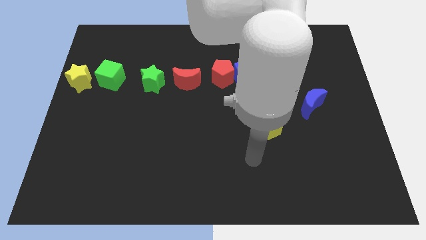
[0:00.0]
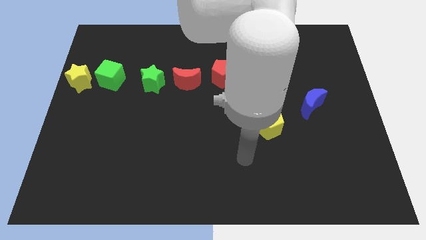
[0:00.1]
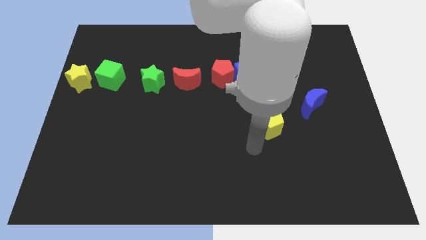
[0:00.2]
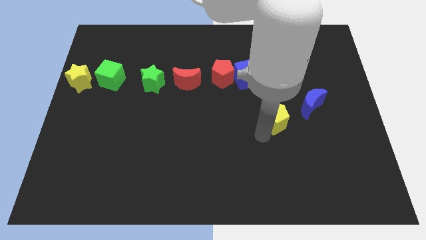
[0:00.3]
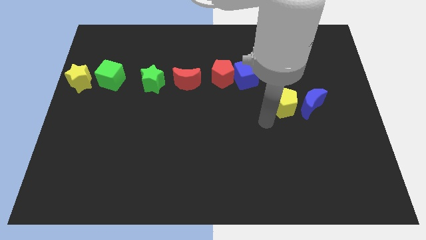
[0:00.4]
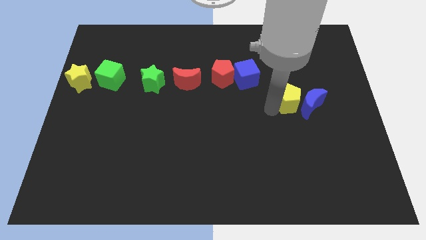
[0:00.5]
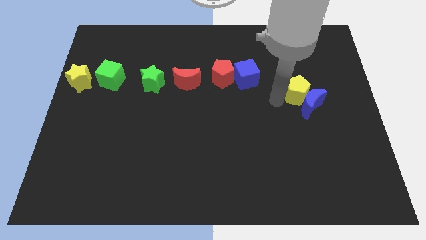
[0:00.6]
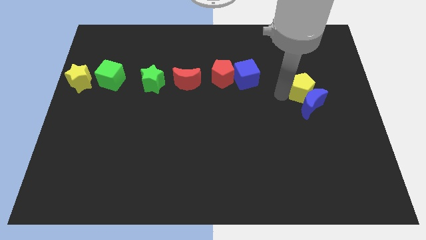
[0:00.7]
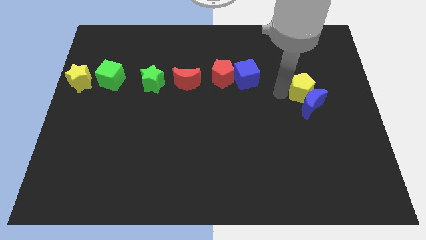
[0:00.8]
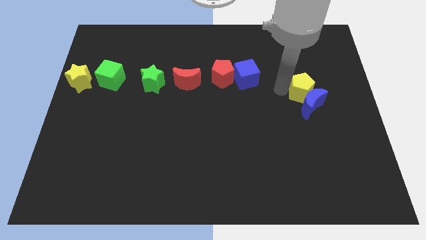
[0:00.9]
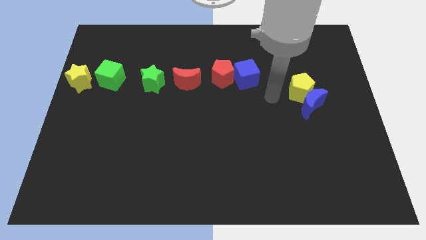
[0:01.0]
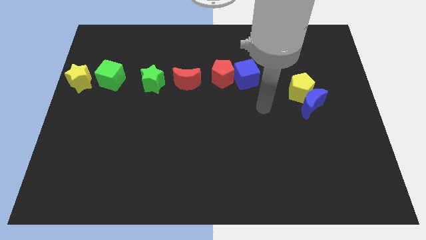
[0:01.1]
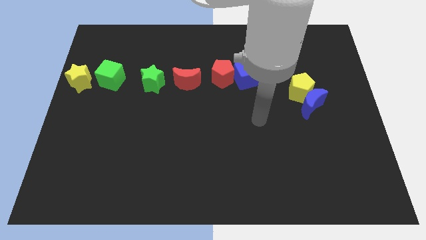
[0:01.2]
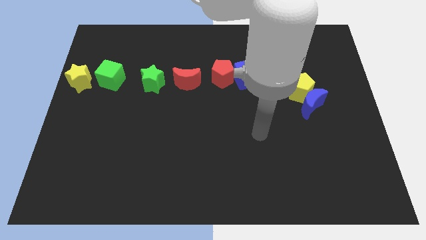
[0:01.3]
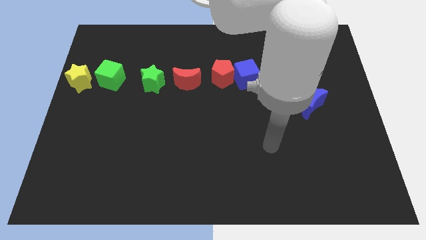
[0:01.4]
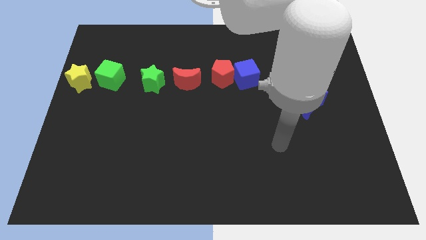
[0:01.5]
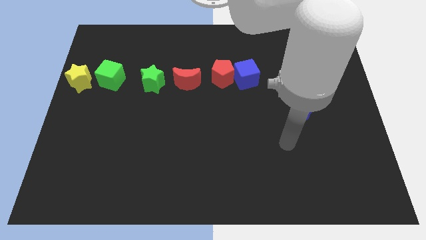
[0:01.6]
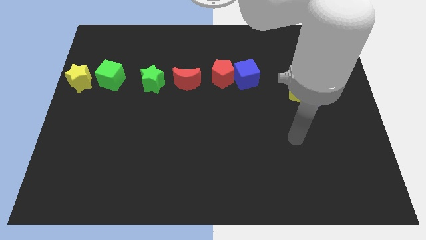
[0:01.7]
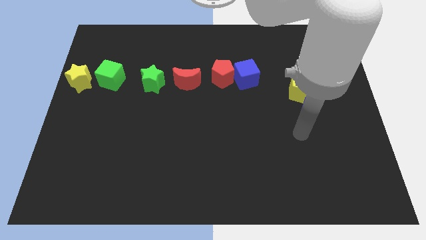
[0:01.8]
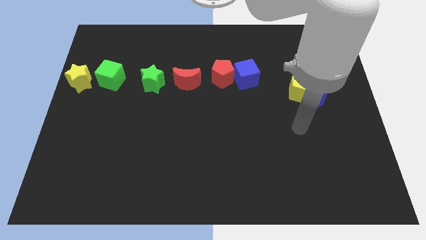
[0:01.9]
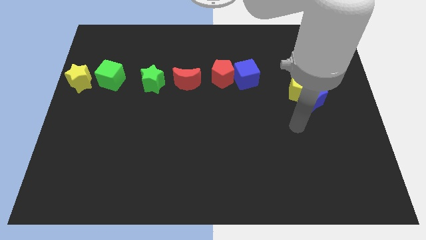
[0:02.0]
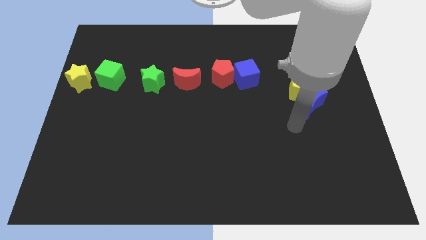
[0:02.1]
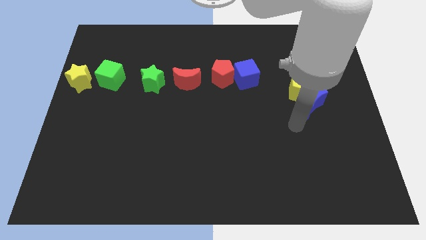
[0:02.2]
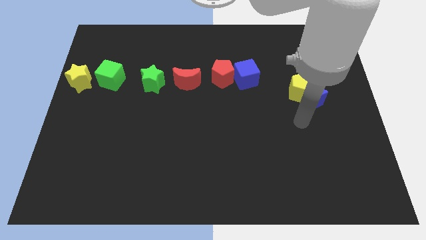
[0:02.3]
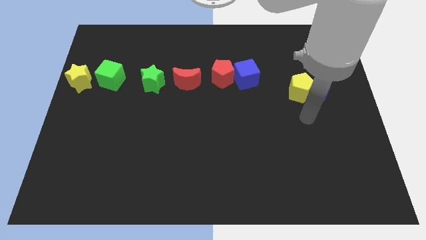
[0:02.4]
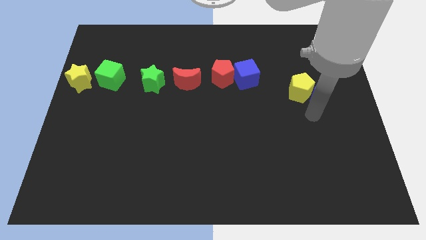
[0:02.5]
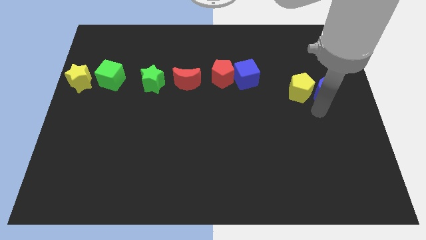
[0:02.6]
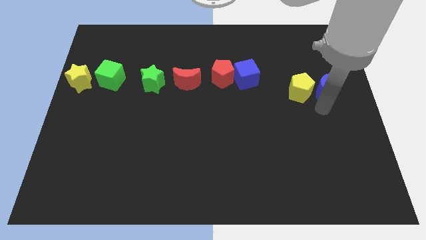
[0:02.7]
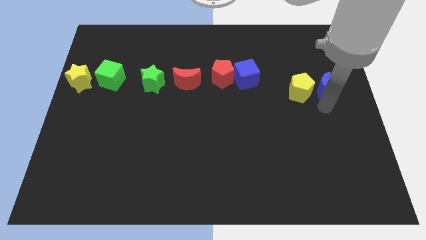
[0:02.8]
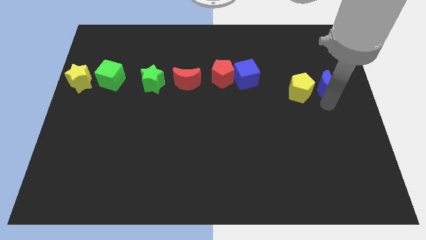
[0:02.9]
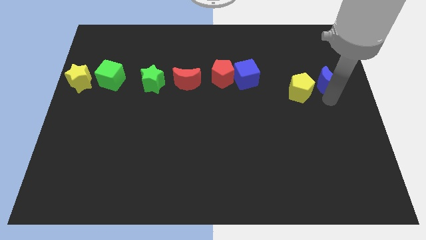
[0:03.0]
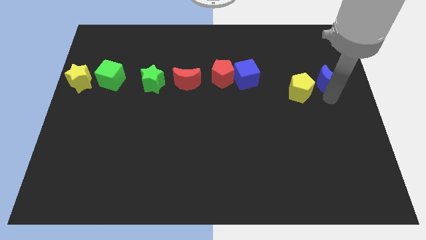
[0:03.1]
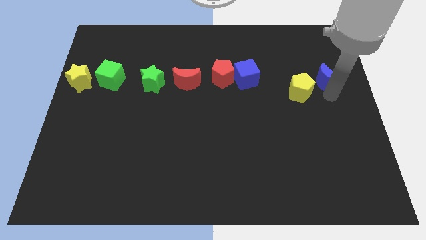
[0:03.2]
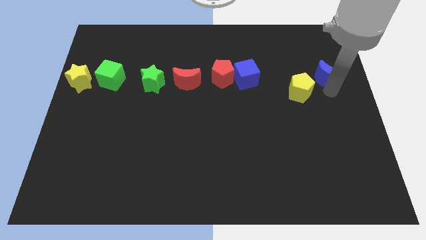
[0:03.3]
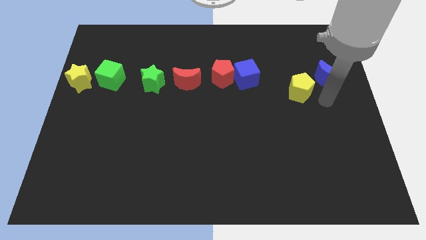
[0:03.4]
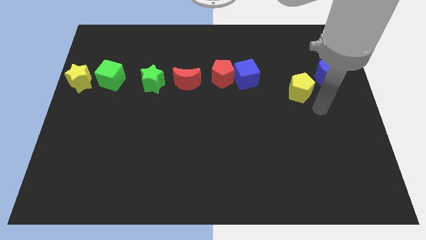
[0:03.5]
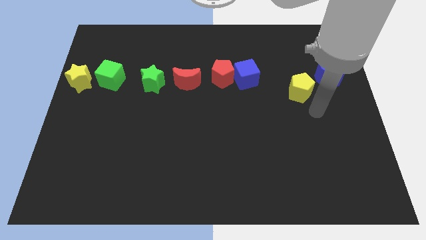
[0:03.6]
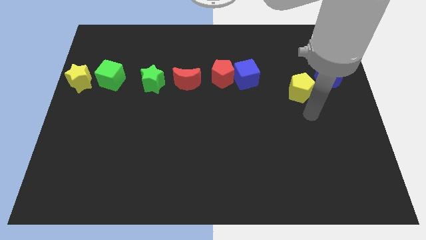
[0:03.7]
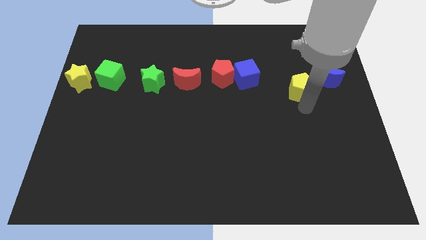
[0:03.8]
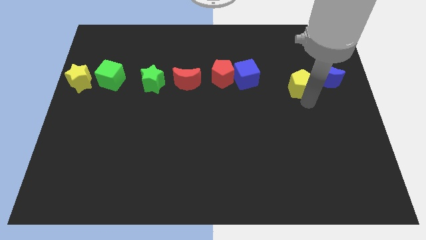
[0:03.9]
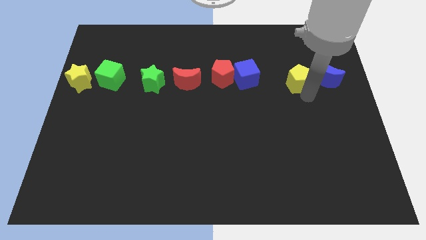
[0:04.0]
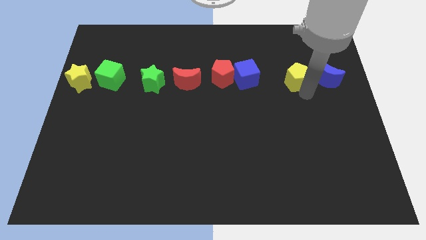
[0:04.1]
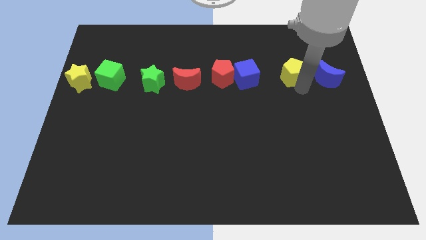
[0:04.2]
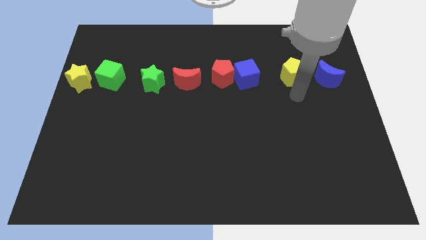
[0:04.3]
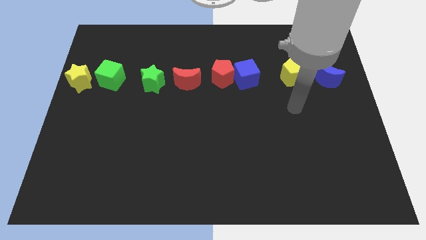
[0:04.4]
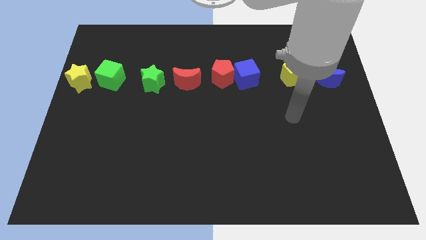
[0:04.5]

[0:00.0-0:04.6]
put the yellow pentagon and blue crescent to the right of the blue cube

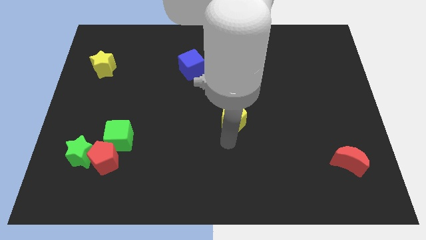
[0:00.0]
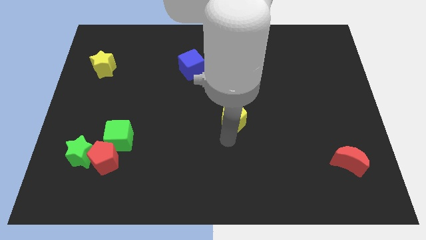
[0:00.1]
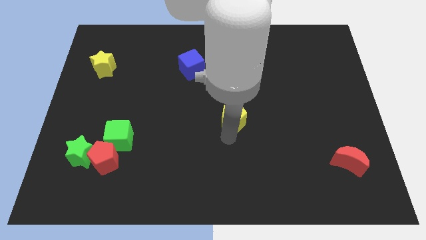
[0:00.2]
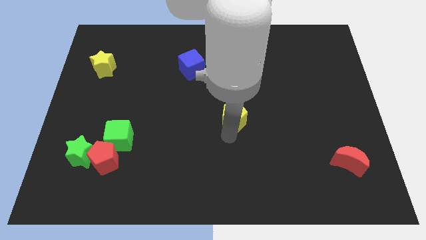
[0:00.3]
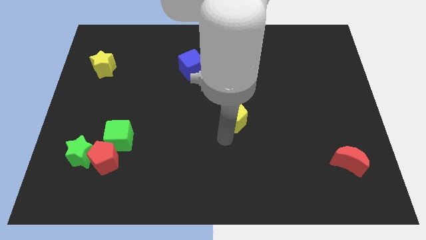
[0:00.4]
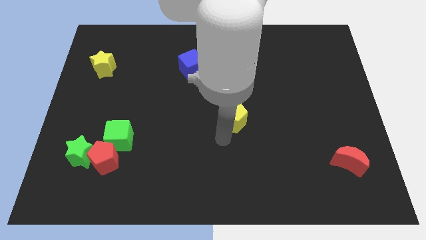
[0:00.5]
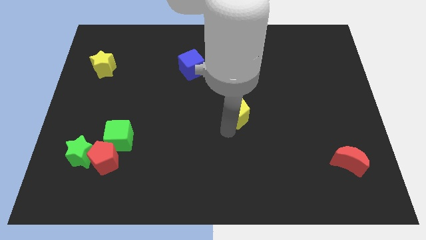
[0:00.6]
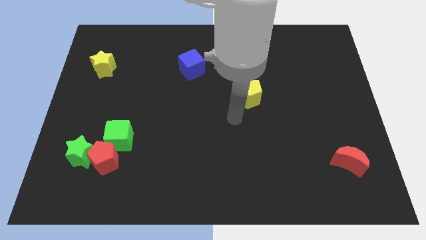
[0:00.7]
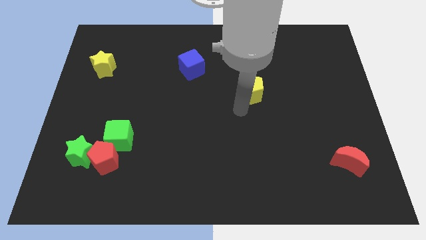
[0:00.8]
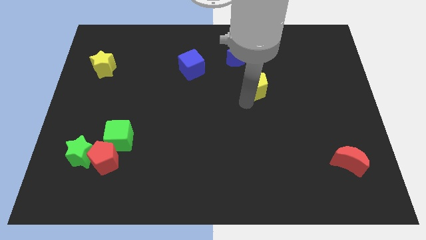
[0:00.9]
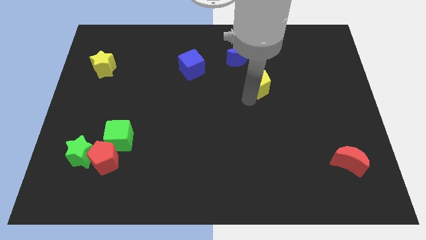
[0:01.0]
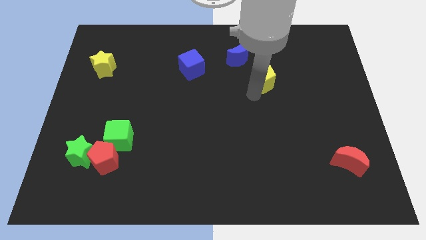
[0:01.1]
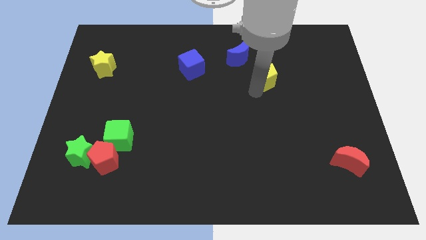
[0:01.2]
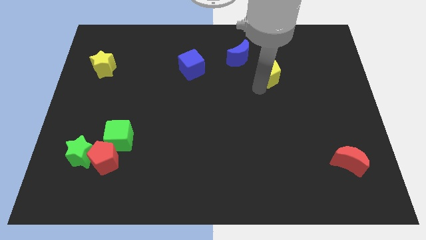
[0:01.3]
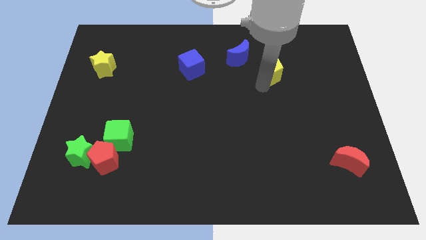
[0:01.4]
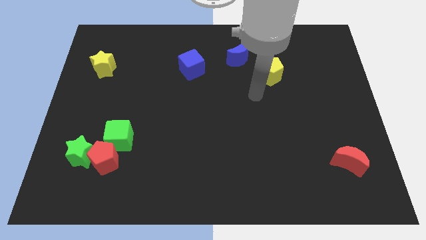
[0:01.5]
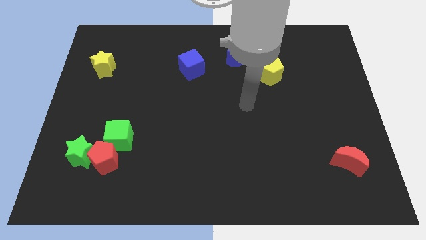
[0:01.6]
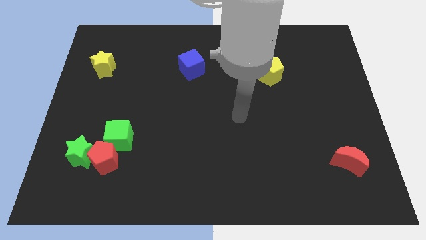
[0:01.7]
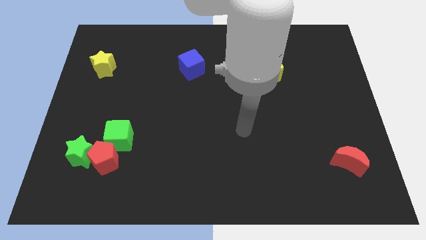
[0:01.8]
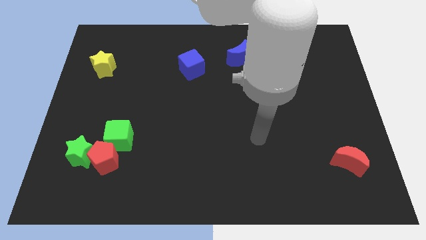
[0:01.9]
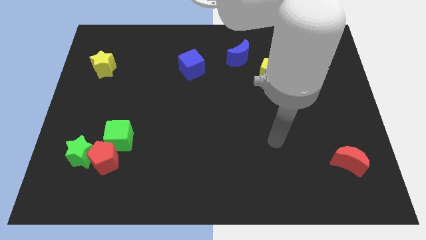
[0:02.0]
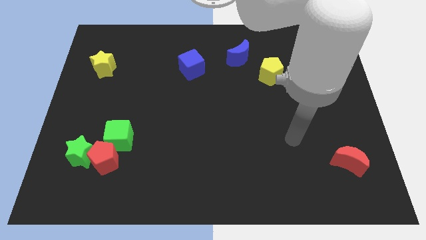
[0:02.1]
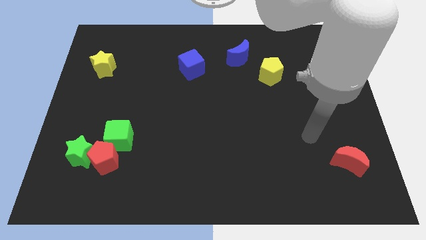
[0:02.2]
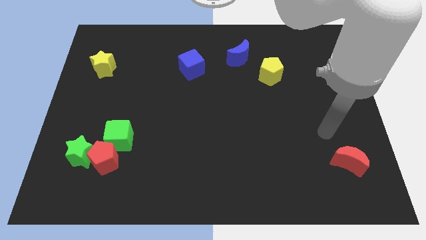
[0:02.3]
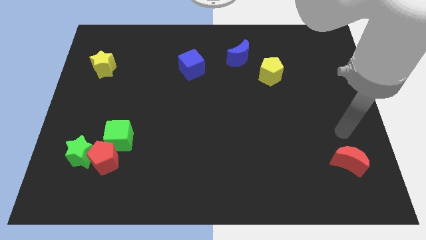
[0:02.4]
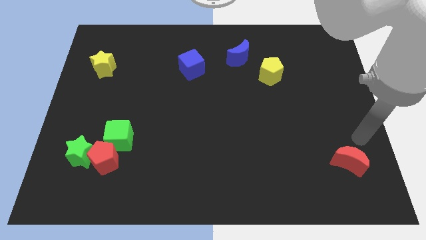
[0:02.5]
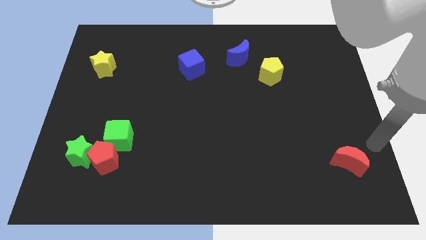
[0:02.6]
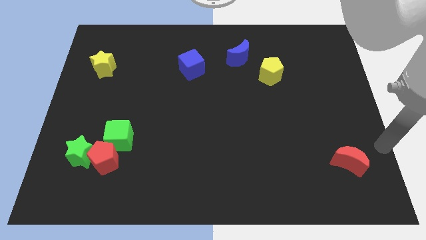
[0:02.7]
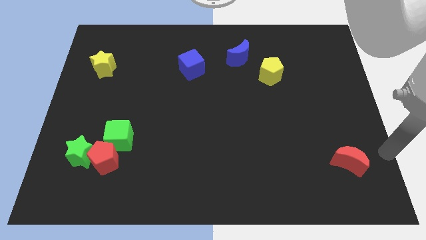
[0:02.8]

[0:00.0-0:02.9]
place the yellow pentagon diagonally at the bottom right of the blue moon

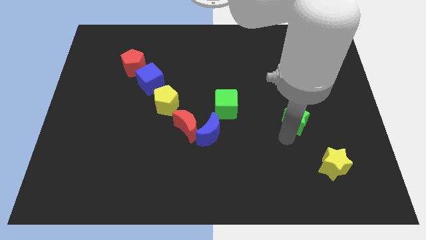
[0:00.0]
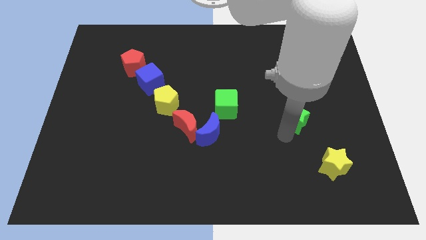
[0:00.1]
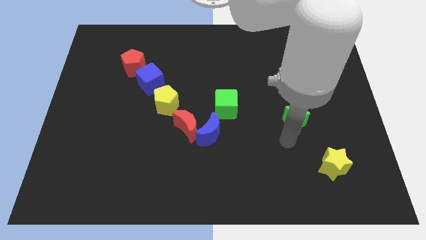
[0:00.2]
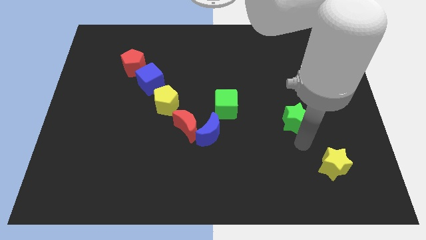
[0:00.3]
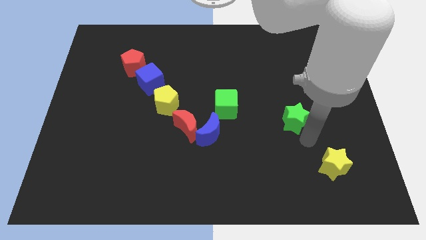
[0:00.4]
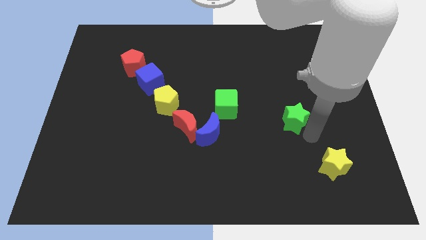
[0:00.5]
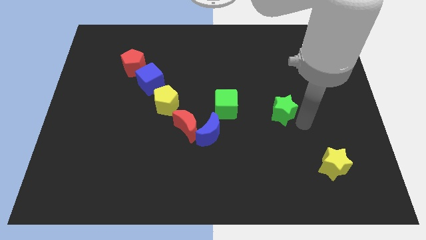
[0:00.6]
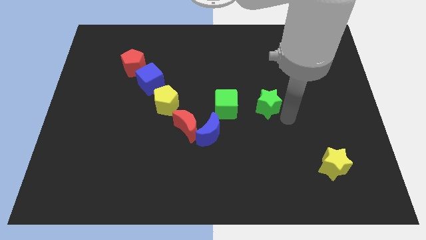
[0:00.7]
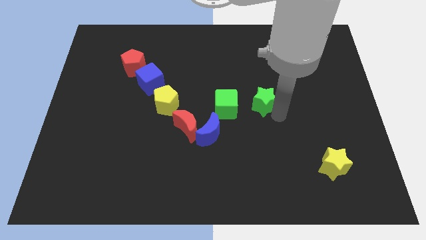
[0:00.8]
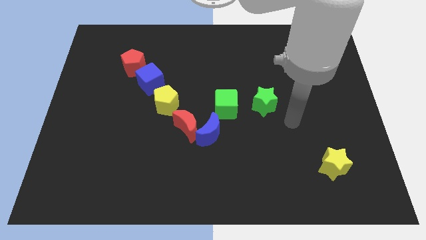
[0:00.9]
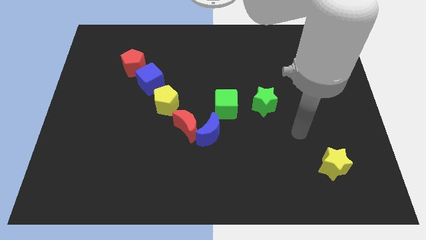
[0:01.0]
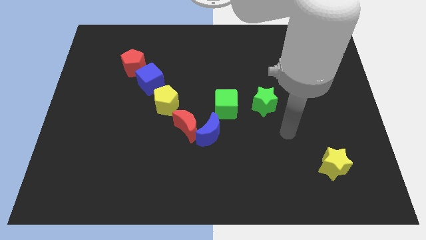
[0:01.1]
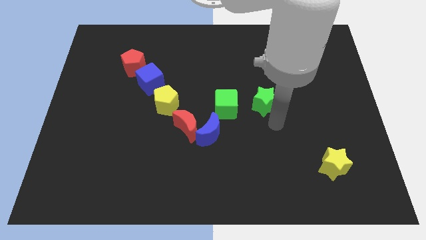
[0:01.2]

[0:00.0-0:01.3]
push the green star to the right of the green cube

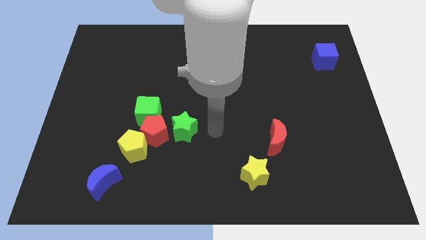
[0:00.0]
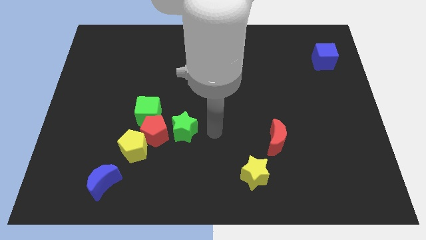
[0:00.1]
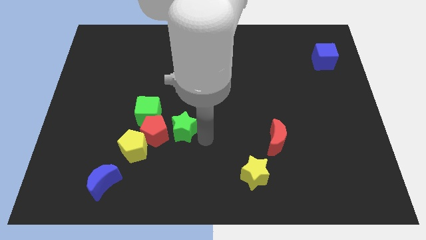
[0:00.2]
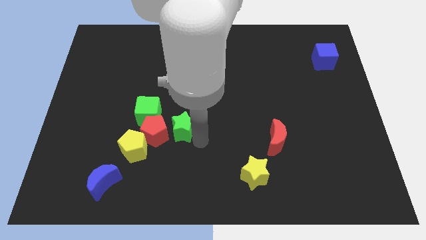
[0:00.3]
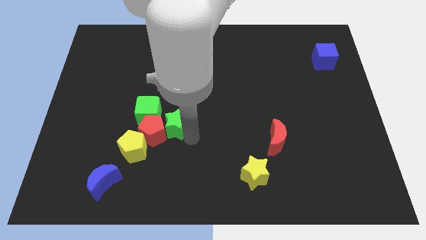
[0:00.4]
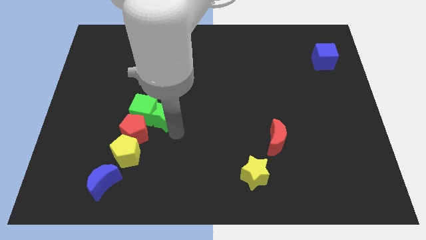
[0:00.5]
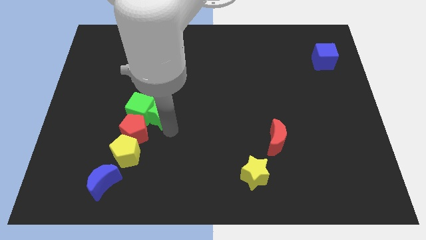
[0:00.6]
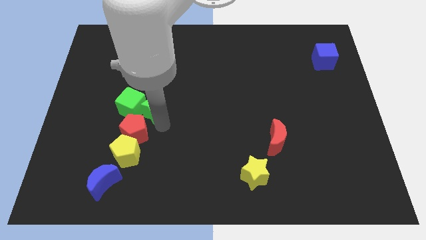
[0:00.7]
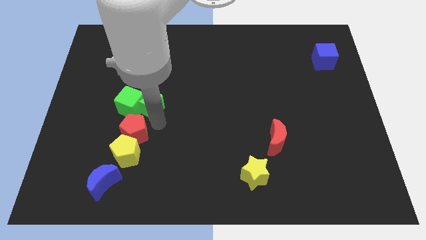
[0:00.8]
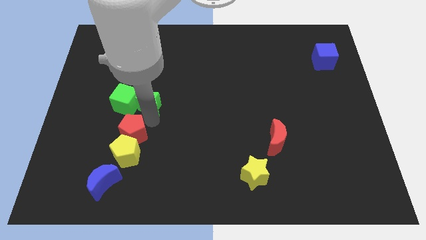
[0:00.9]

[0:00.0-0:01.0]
group up the green blocks above the red pentagon
